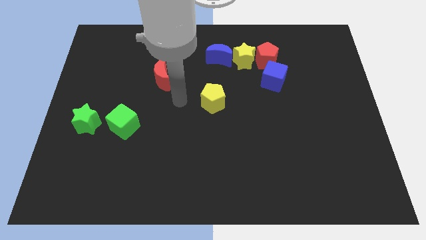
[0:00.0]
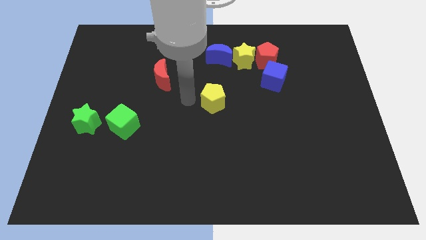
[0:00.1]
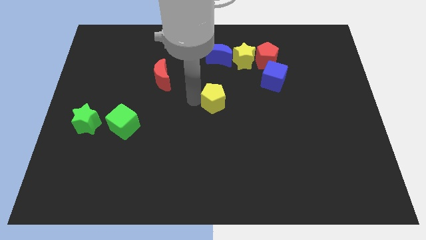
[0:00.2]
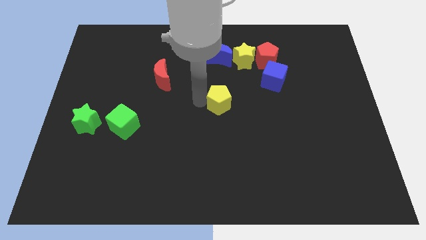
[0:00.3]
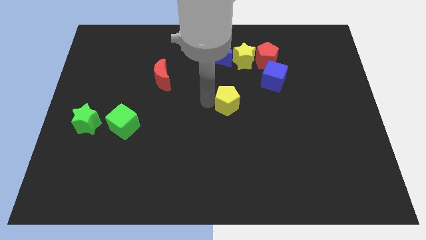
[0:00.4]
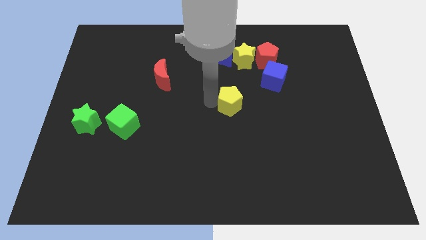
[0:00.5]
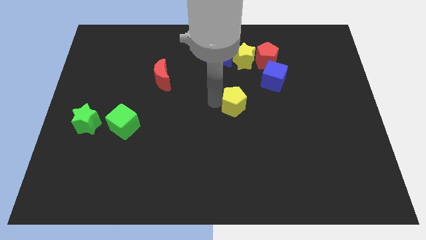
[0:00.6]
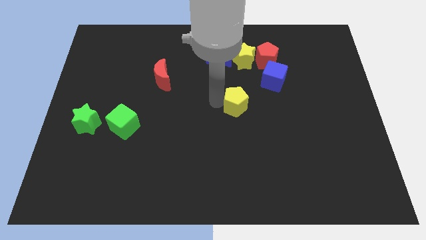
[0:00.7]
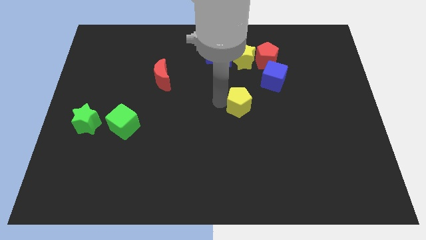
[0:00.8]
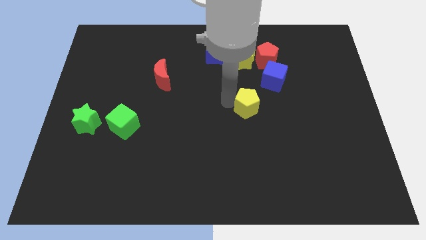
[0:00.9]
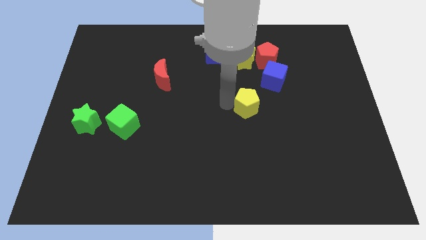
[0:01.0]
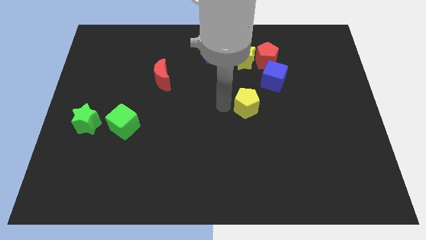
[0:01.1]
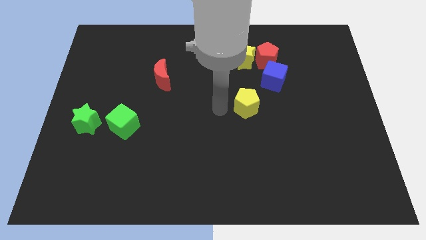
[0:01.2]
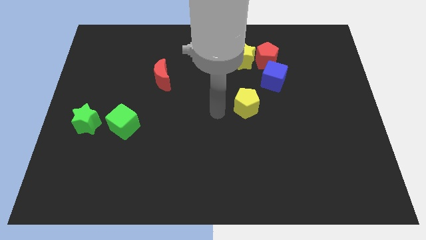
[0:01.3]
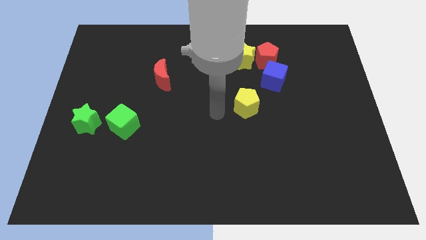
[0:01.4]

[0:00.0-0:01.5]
place the yellow pentagon below the blue cube

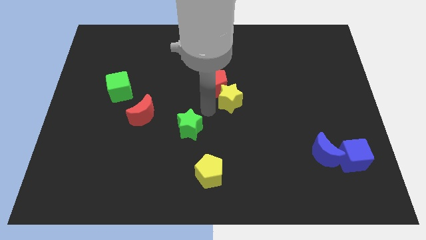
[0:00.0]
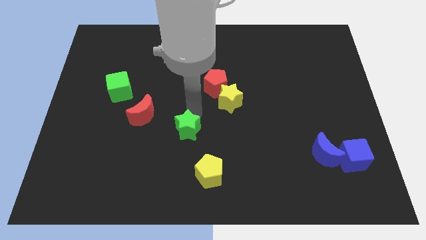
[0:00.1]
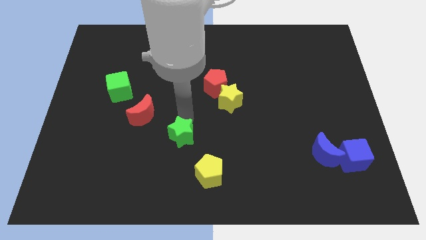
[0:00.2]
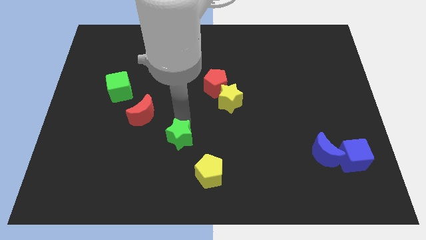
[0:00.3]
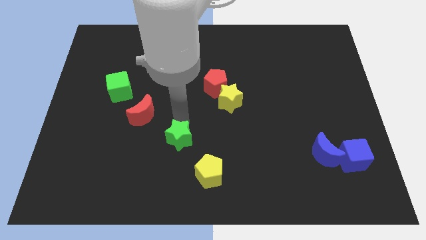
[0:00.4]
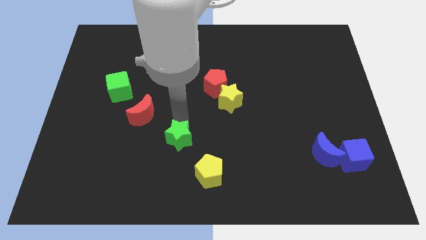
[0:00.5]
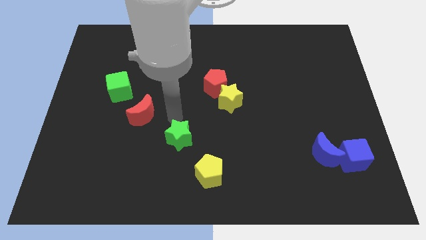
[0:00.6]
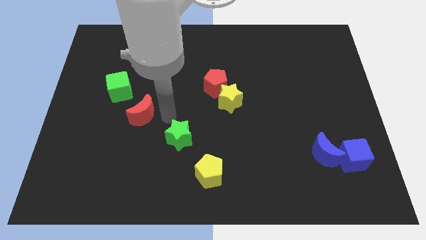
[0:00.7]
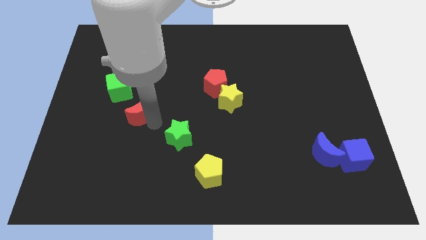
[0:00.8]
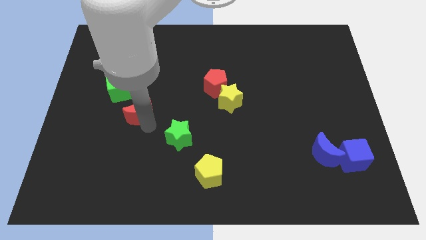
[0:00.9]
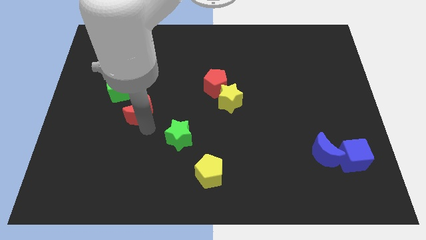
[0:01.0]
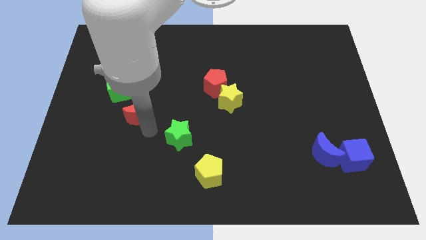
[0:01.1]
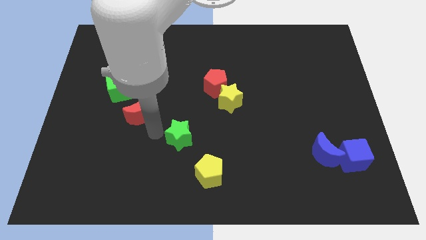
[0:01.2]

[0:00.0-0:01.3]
move the green star in between ed crescent and yellow pentagon

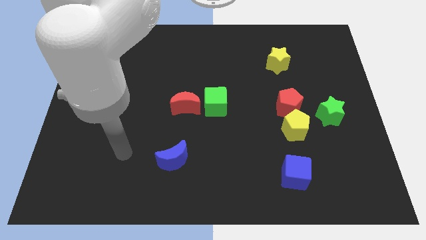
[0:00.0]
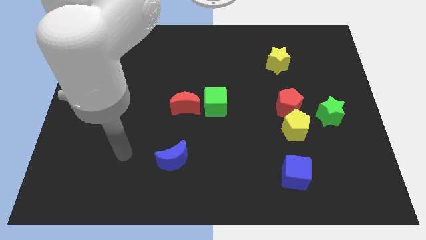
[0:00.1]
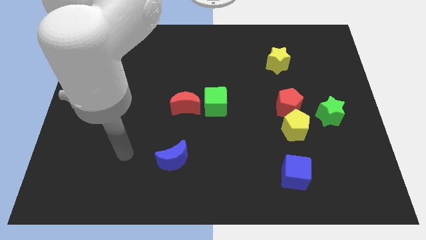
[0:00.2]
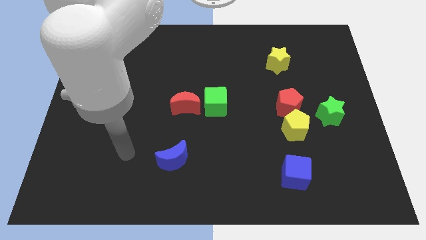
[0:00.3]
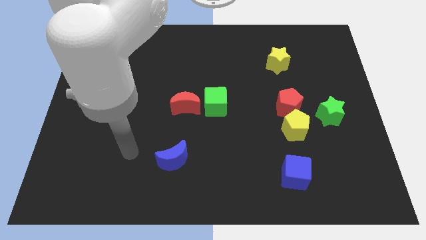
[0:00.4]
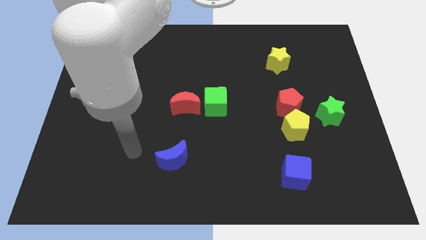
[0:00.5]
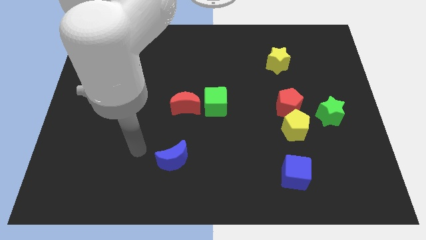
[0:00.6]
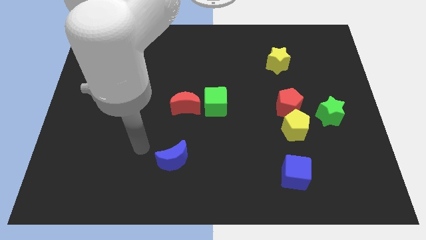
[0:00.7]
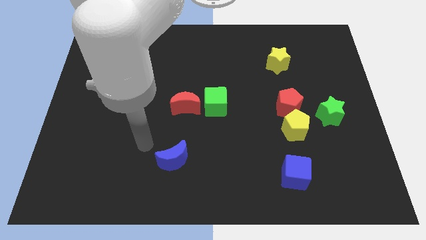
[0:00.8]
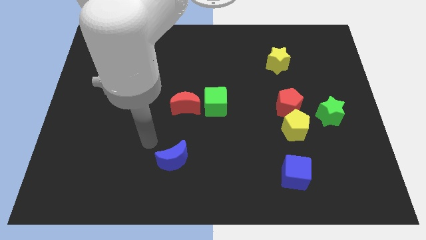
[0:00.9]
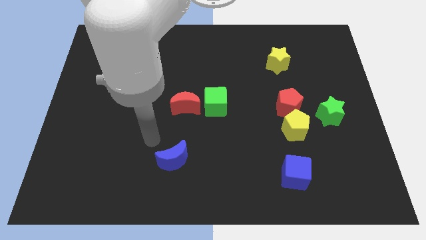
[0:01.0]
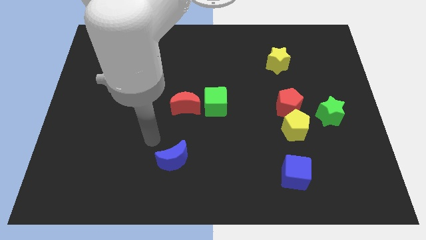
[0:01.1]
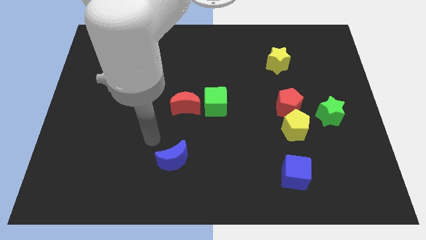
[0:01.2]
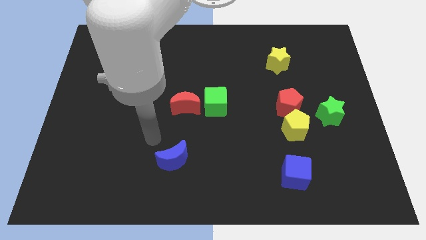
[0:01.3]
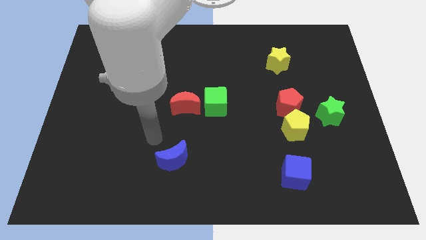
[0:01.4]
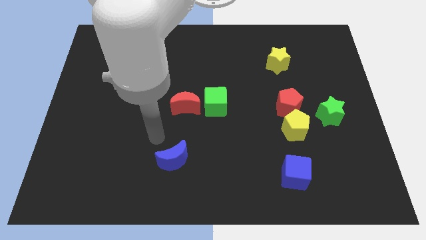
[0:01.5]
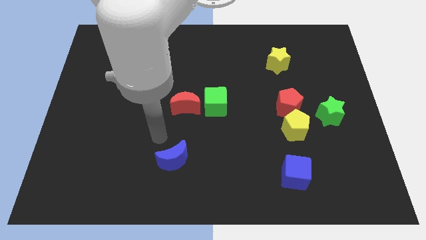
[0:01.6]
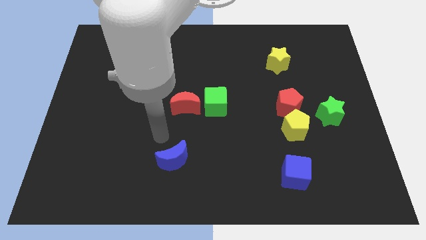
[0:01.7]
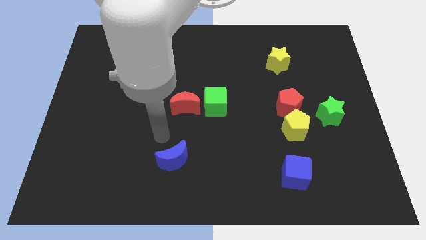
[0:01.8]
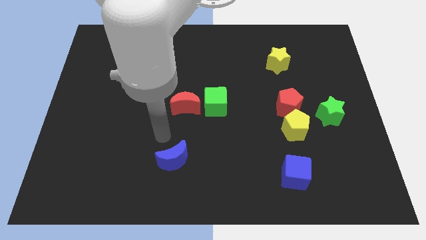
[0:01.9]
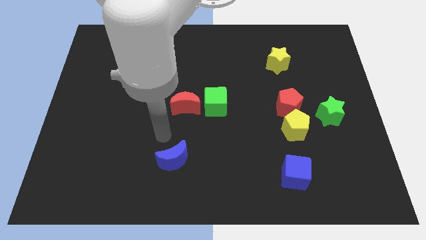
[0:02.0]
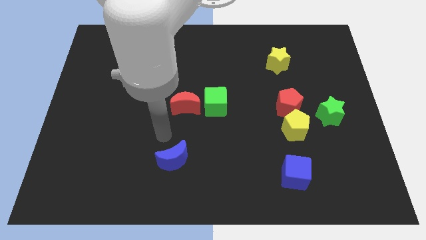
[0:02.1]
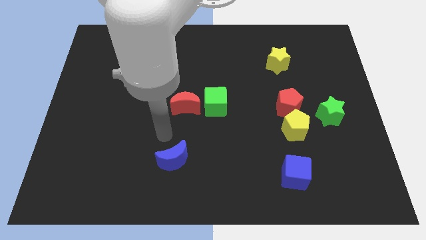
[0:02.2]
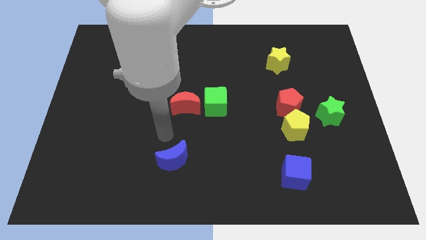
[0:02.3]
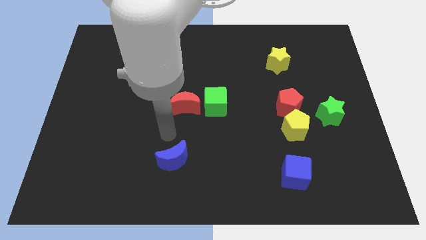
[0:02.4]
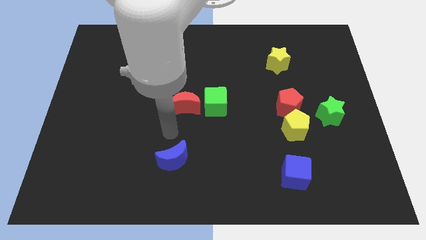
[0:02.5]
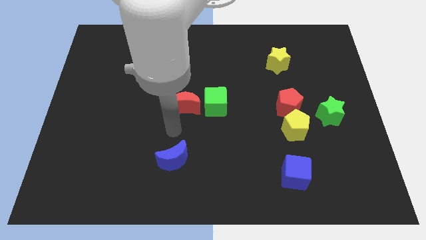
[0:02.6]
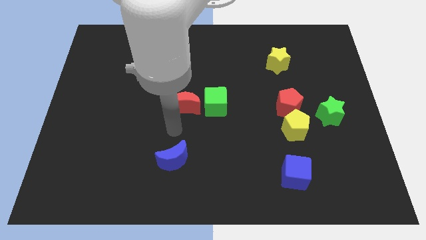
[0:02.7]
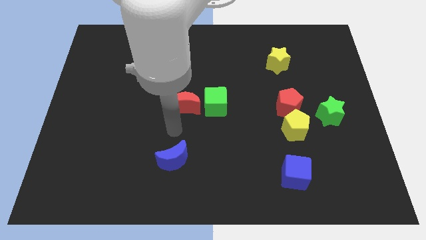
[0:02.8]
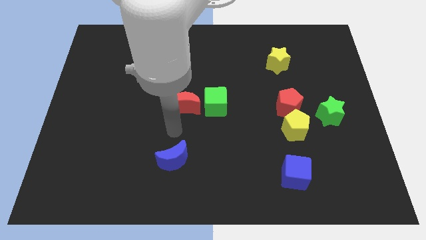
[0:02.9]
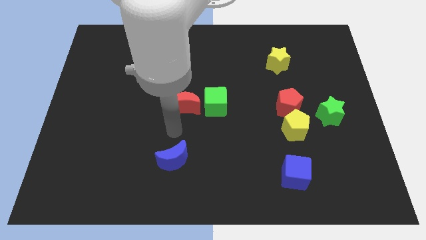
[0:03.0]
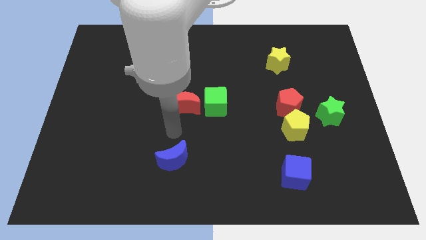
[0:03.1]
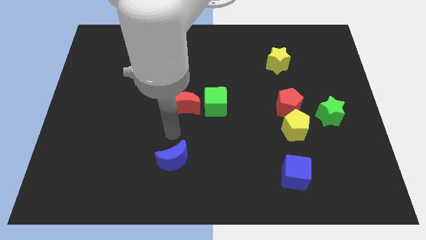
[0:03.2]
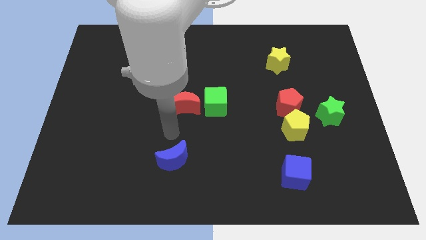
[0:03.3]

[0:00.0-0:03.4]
move your hand towards red crescent

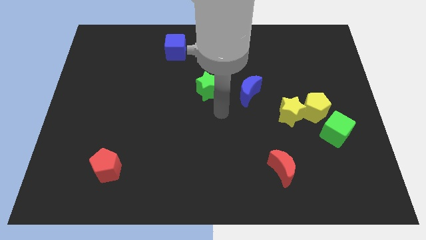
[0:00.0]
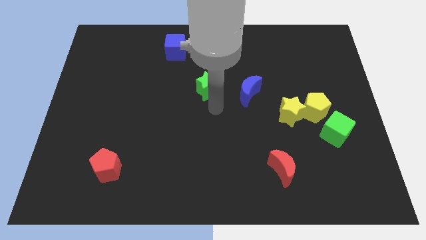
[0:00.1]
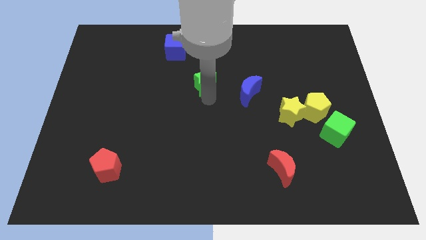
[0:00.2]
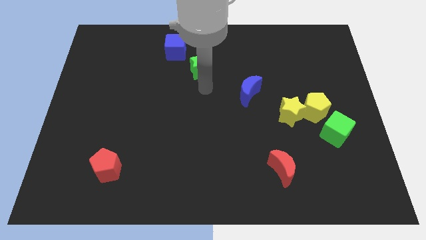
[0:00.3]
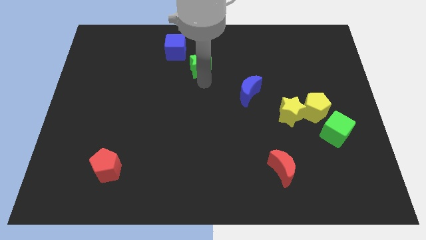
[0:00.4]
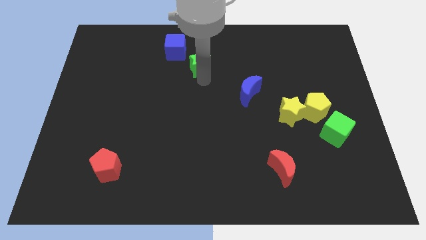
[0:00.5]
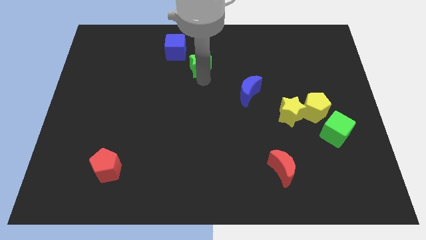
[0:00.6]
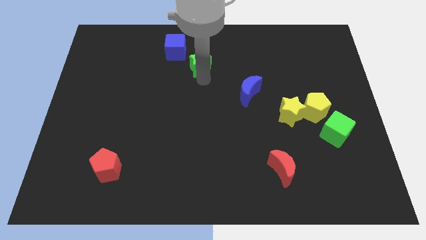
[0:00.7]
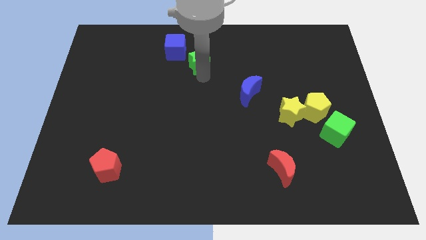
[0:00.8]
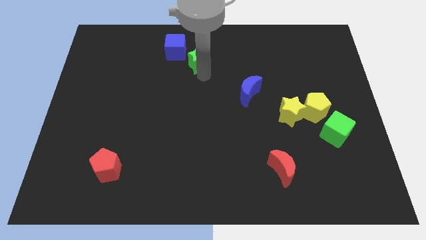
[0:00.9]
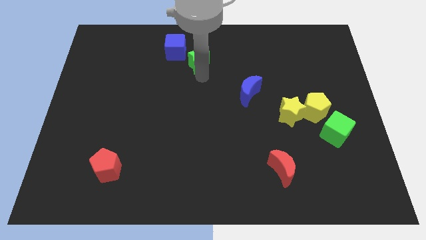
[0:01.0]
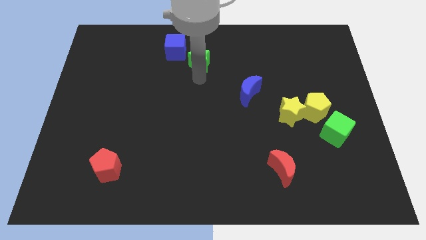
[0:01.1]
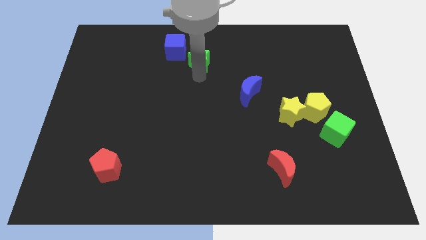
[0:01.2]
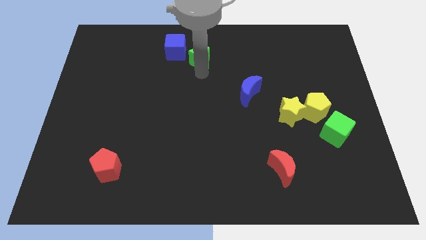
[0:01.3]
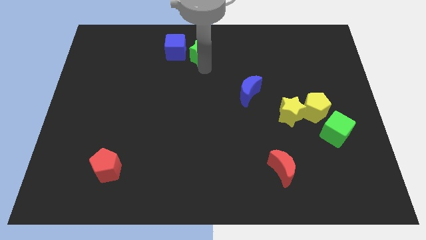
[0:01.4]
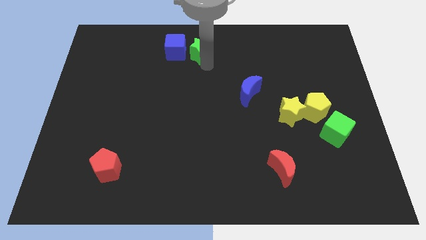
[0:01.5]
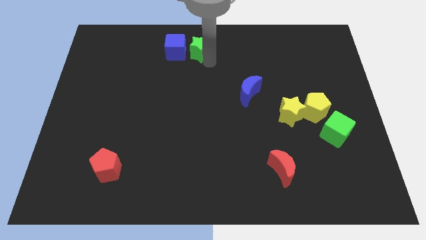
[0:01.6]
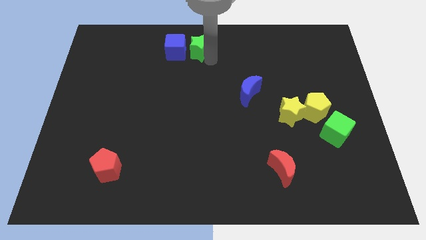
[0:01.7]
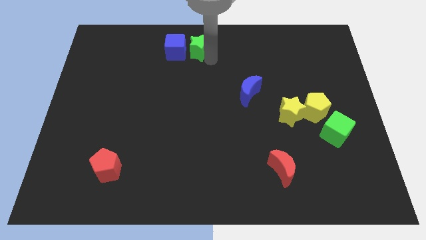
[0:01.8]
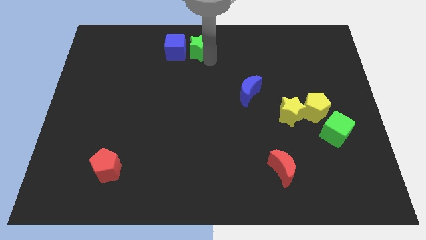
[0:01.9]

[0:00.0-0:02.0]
place the green star at the right side of the blue cube

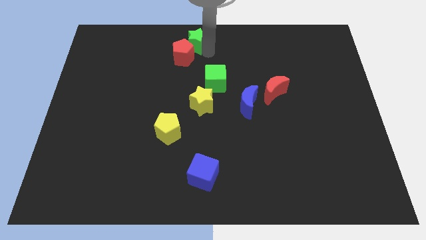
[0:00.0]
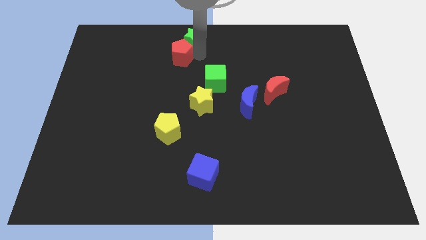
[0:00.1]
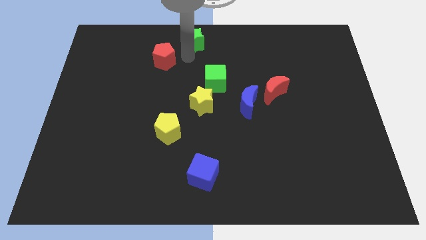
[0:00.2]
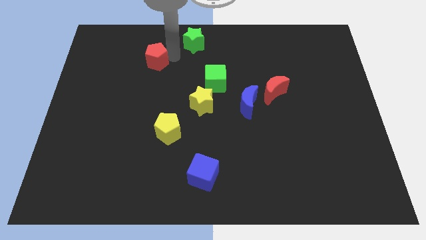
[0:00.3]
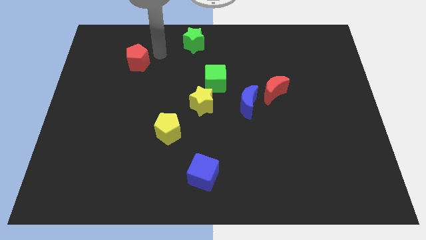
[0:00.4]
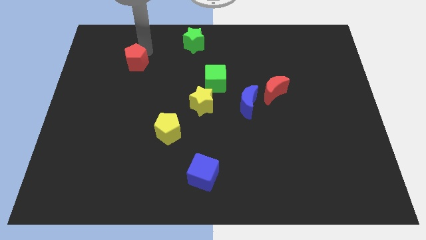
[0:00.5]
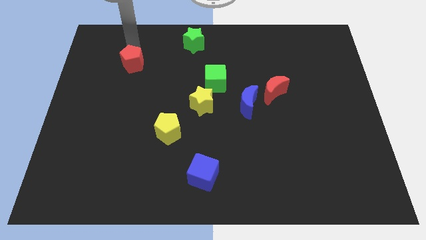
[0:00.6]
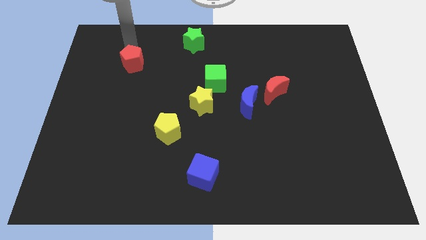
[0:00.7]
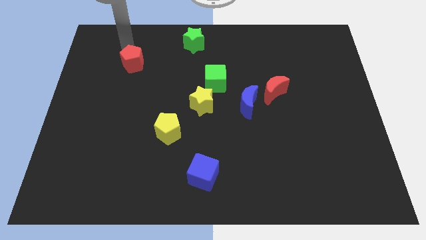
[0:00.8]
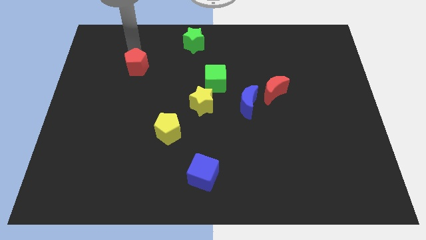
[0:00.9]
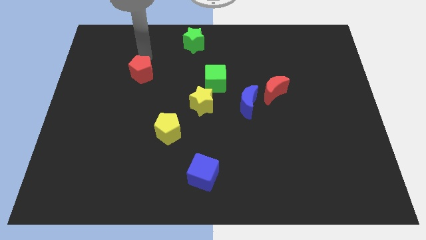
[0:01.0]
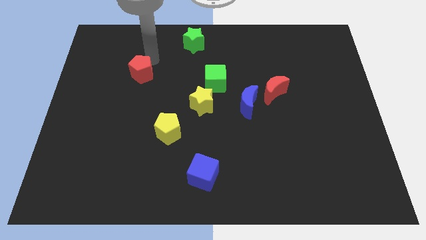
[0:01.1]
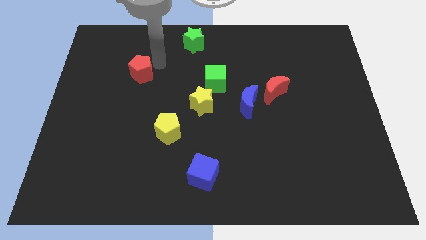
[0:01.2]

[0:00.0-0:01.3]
separate the red pentagon from the green star
